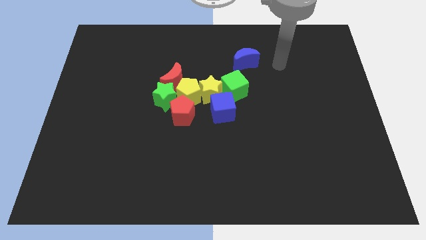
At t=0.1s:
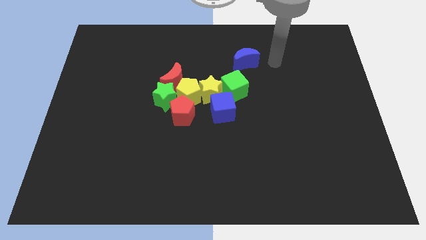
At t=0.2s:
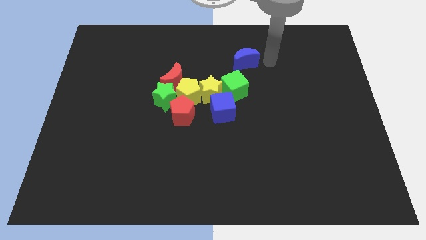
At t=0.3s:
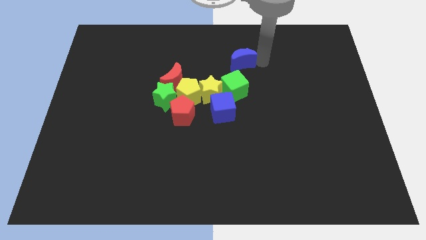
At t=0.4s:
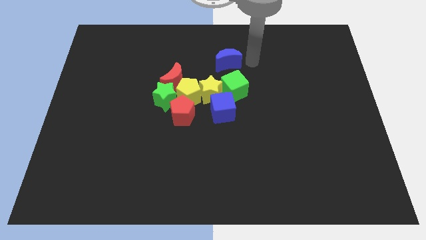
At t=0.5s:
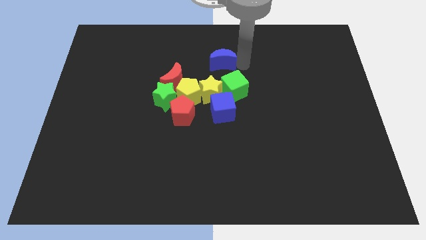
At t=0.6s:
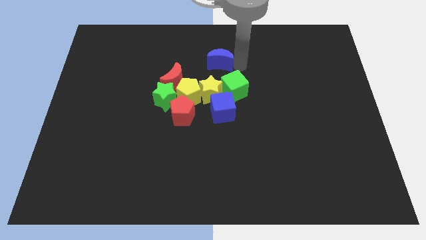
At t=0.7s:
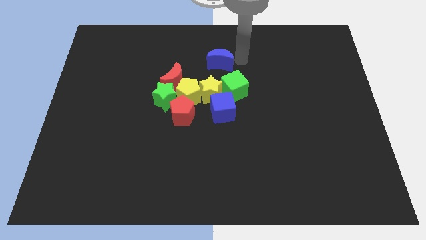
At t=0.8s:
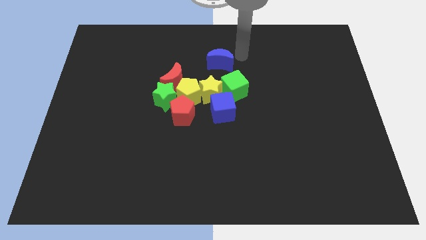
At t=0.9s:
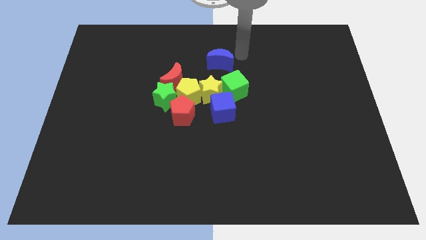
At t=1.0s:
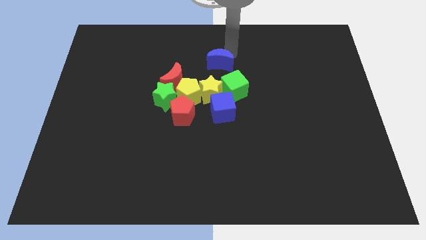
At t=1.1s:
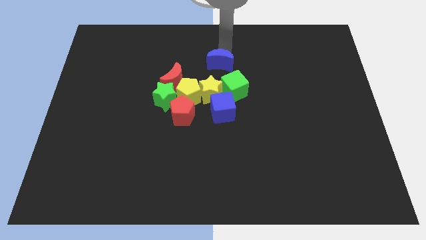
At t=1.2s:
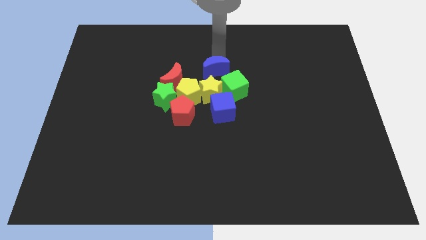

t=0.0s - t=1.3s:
place blue moon above yellow star

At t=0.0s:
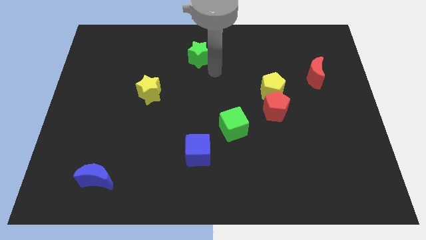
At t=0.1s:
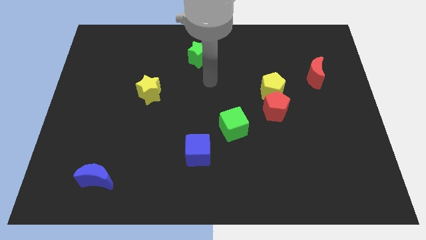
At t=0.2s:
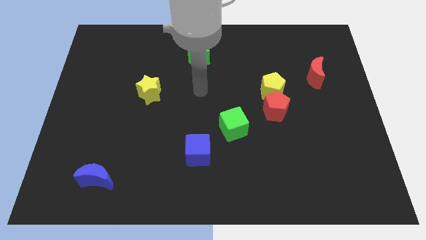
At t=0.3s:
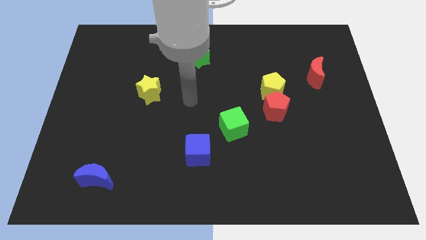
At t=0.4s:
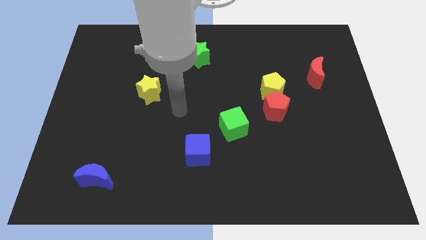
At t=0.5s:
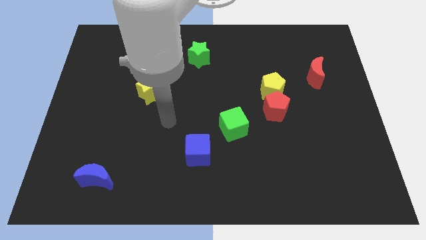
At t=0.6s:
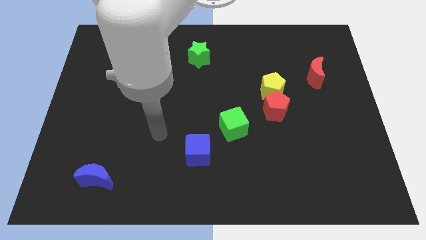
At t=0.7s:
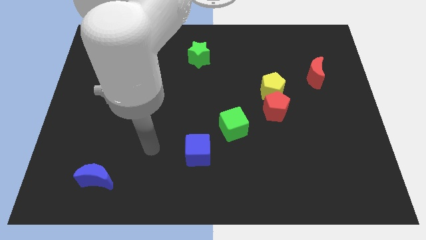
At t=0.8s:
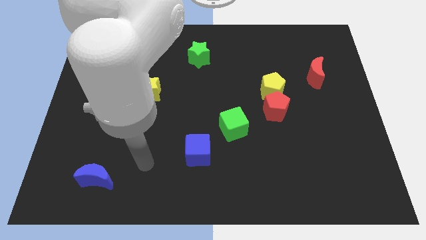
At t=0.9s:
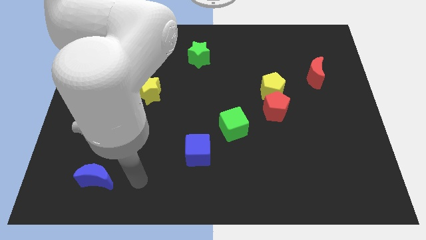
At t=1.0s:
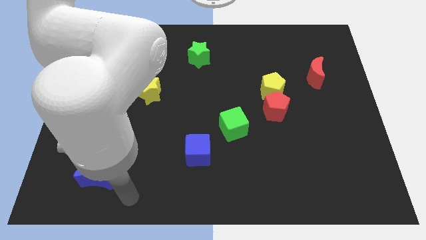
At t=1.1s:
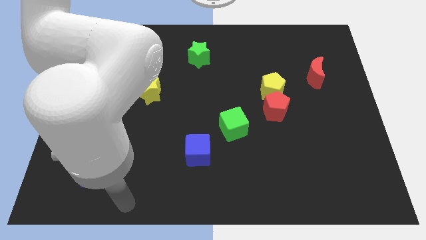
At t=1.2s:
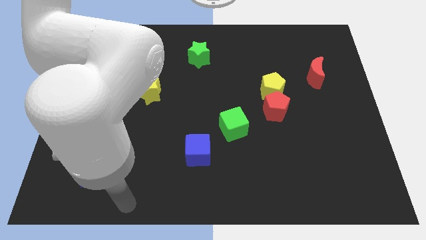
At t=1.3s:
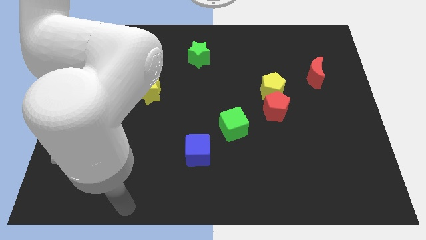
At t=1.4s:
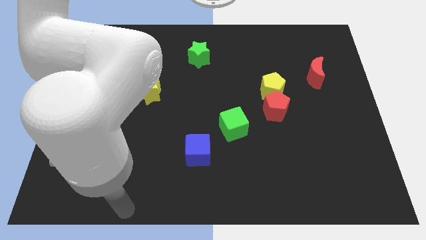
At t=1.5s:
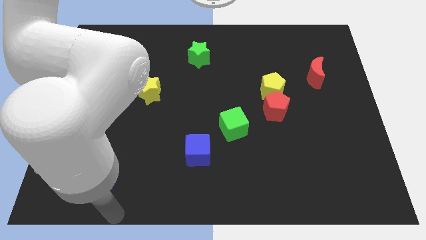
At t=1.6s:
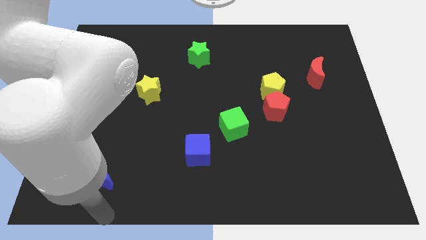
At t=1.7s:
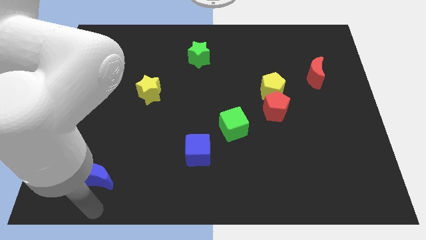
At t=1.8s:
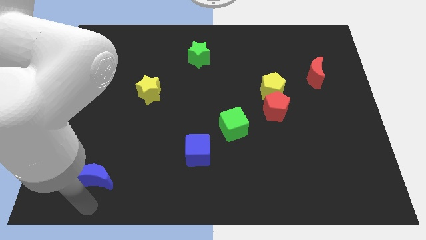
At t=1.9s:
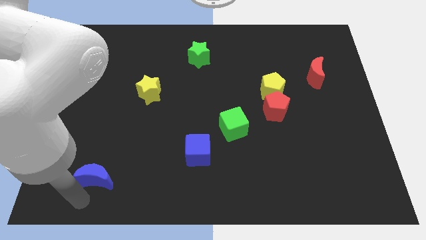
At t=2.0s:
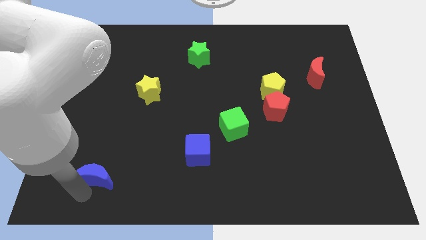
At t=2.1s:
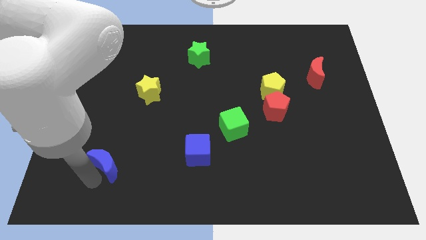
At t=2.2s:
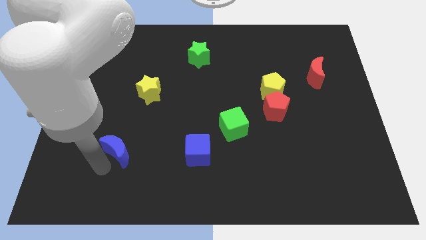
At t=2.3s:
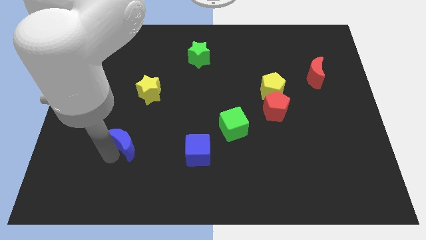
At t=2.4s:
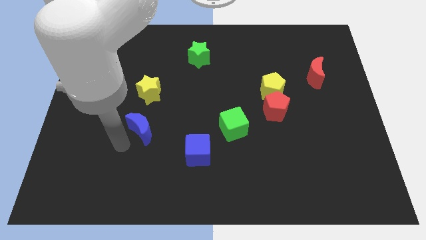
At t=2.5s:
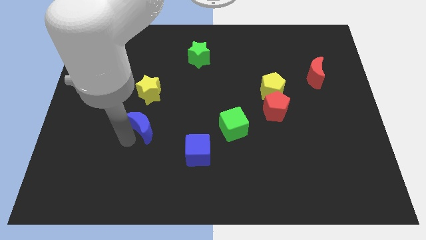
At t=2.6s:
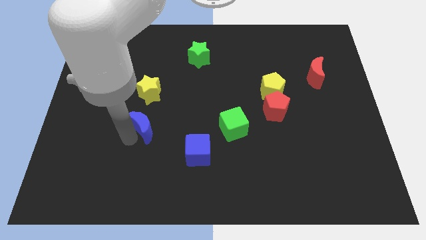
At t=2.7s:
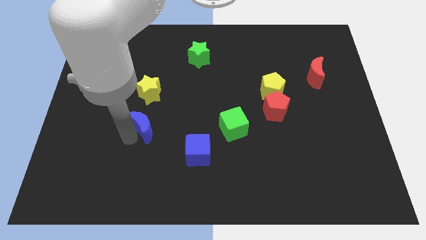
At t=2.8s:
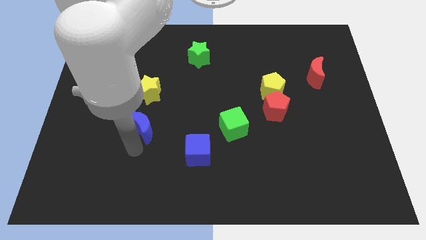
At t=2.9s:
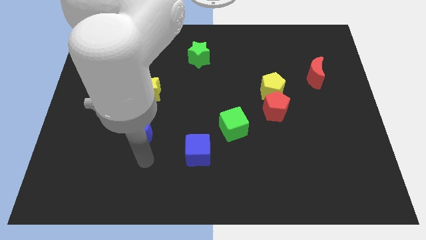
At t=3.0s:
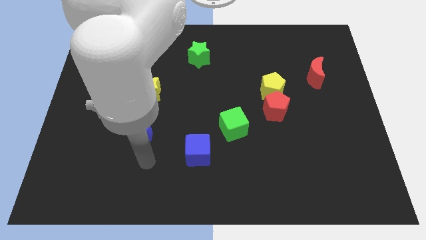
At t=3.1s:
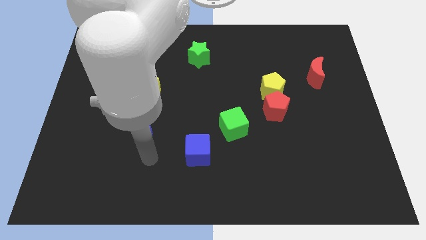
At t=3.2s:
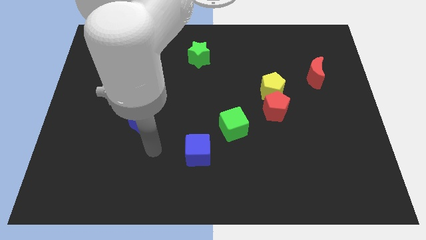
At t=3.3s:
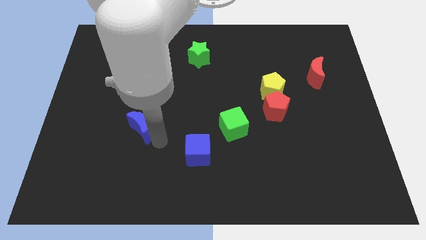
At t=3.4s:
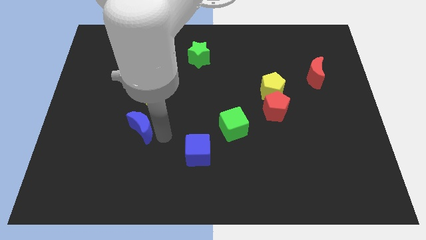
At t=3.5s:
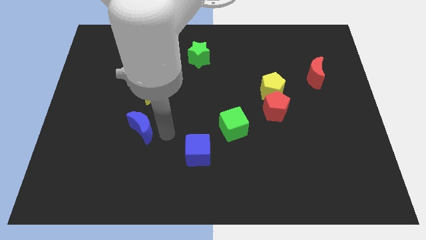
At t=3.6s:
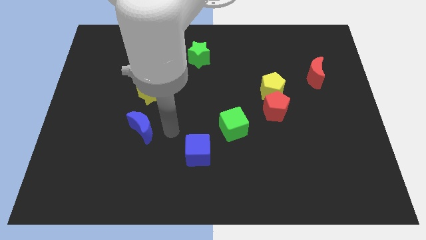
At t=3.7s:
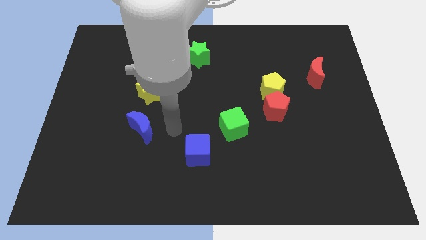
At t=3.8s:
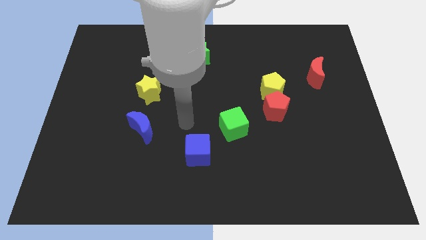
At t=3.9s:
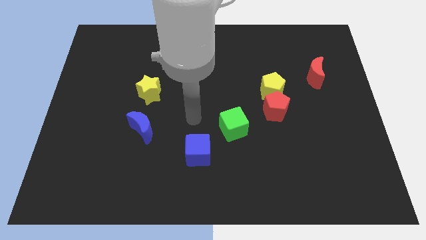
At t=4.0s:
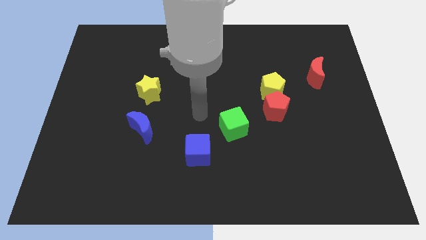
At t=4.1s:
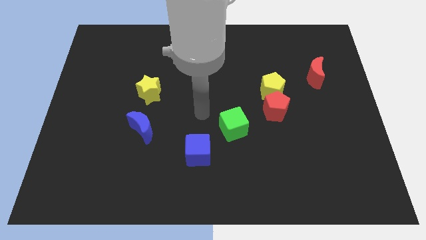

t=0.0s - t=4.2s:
put the blue crescent underneath the yellow star

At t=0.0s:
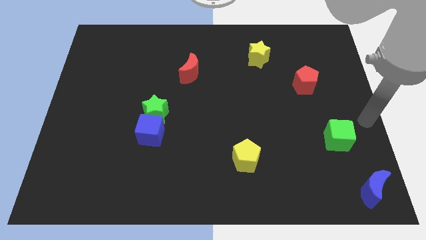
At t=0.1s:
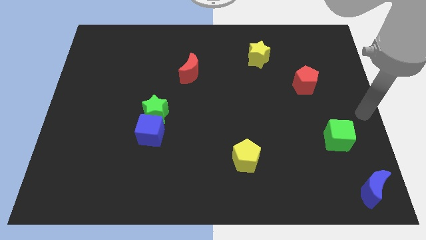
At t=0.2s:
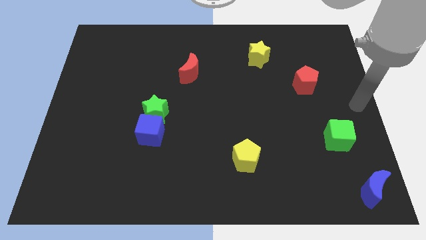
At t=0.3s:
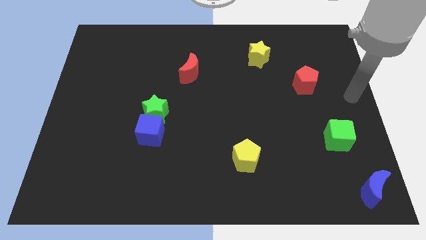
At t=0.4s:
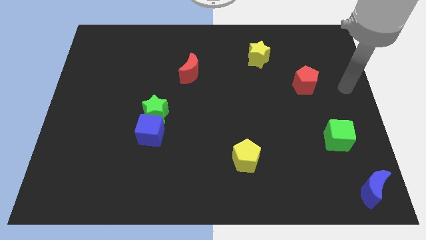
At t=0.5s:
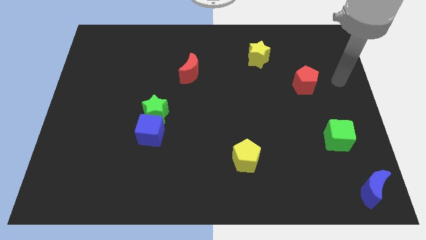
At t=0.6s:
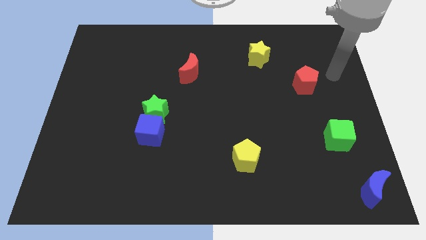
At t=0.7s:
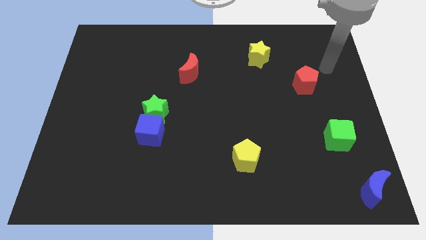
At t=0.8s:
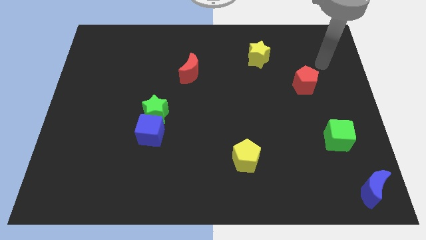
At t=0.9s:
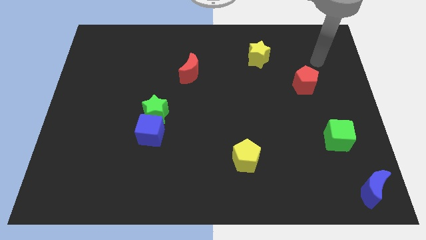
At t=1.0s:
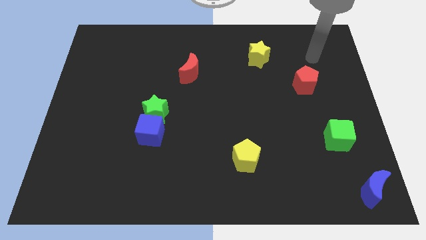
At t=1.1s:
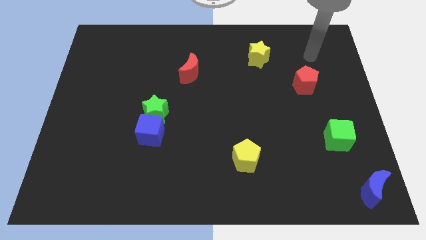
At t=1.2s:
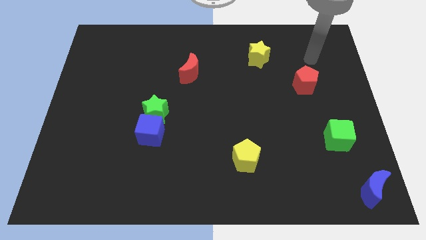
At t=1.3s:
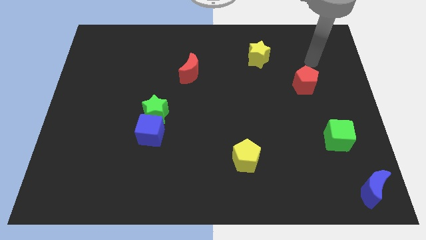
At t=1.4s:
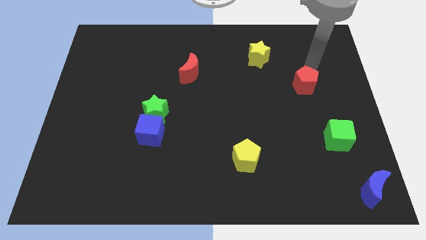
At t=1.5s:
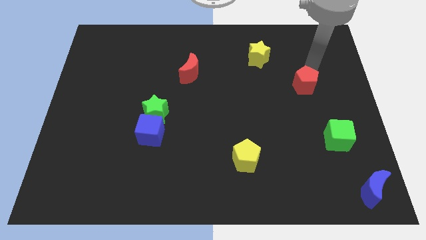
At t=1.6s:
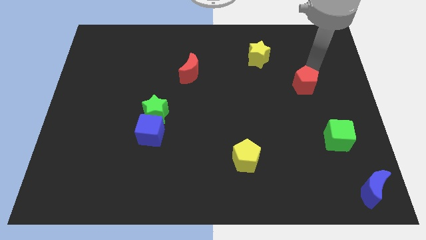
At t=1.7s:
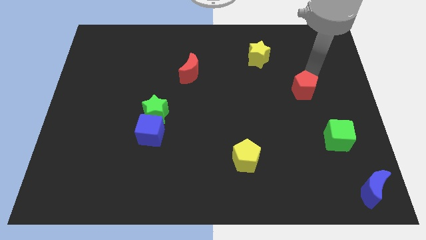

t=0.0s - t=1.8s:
move arm to the red pentagon

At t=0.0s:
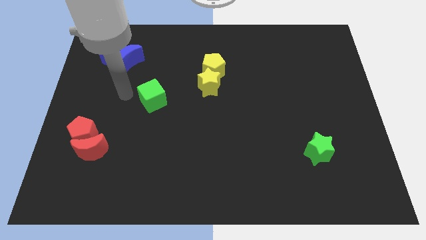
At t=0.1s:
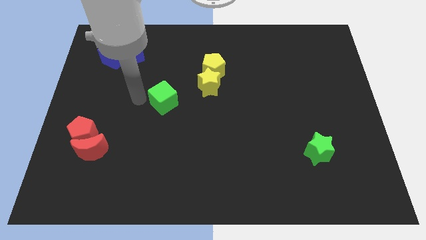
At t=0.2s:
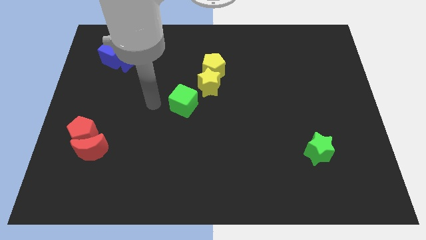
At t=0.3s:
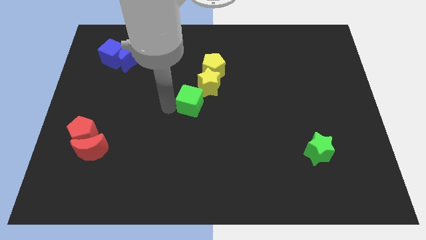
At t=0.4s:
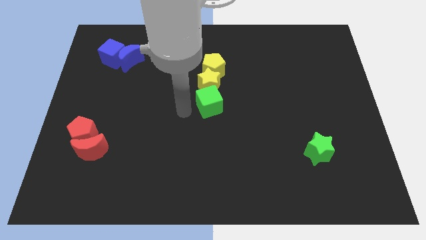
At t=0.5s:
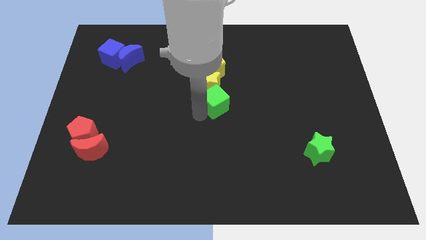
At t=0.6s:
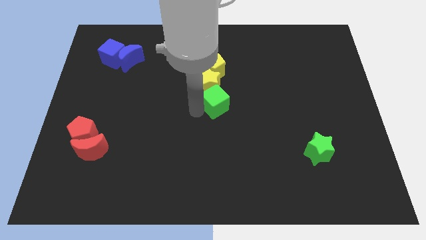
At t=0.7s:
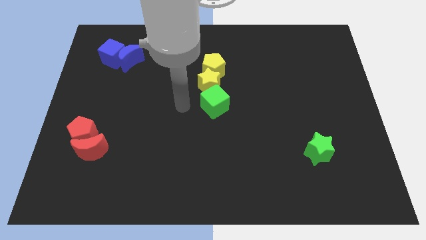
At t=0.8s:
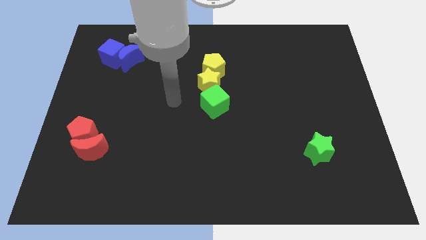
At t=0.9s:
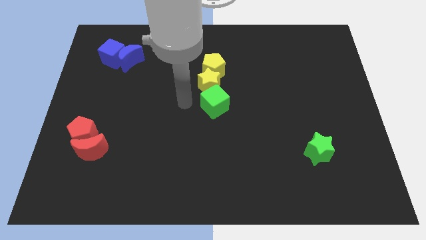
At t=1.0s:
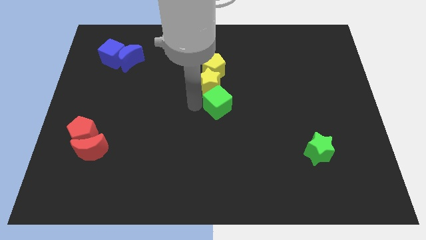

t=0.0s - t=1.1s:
push the green cube below the yellow star

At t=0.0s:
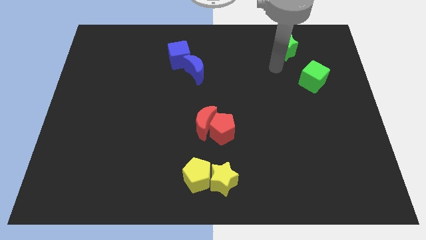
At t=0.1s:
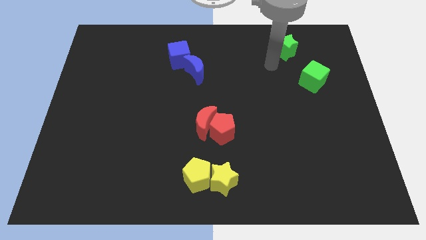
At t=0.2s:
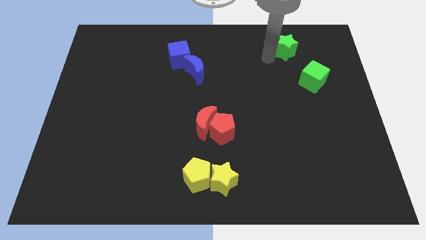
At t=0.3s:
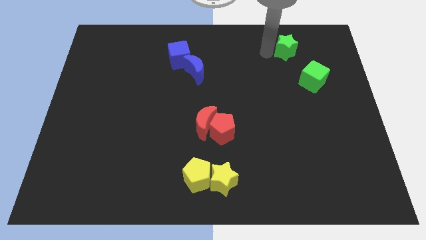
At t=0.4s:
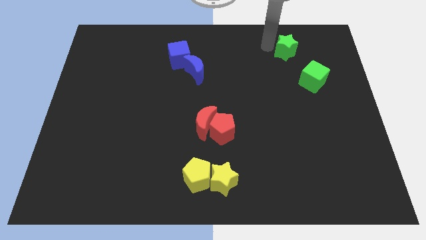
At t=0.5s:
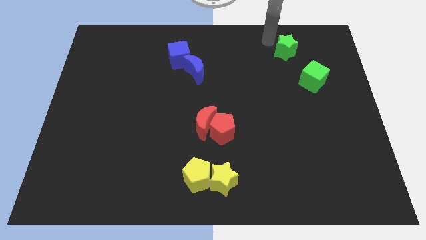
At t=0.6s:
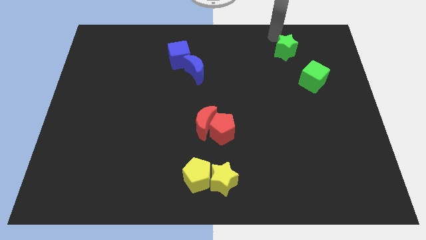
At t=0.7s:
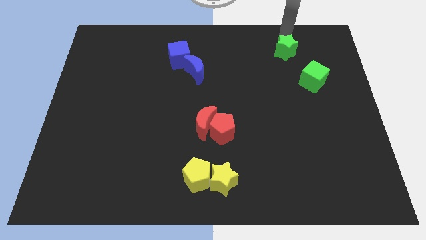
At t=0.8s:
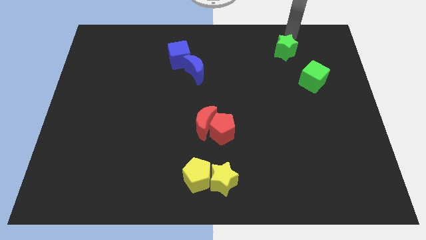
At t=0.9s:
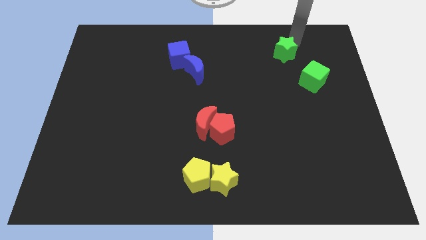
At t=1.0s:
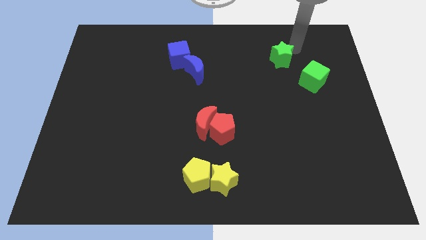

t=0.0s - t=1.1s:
place your hand to the right of the green star
